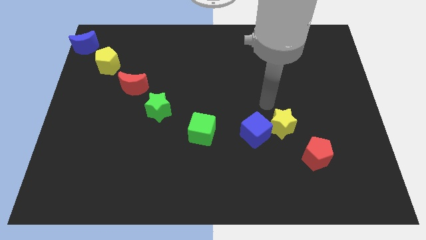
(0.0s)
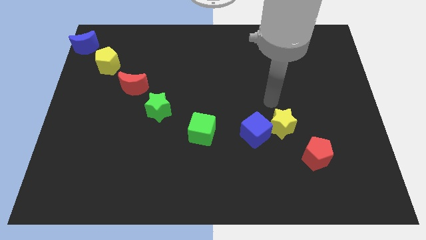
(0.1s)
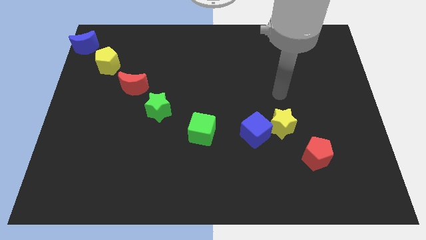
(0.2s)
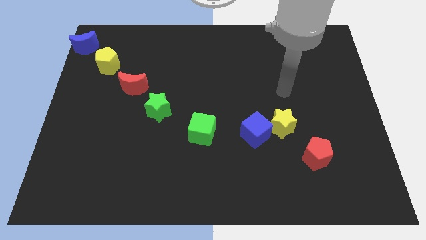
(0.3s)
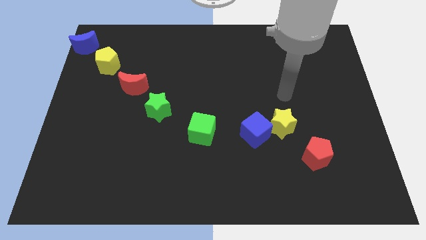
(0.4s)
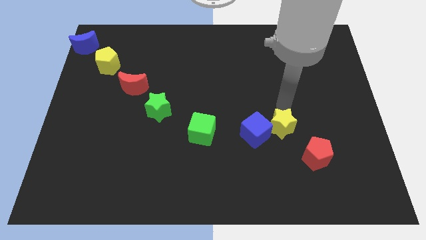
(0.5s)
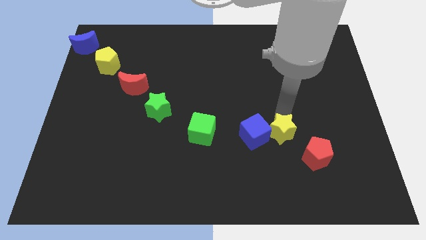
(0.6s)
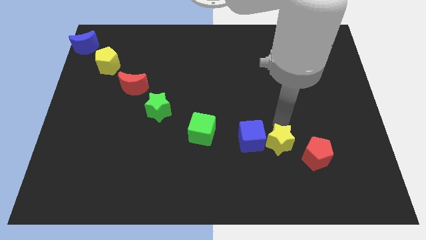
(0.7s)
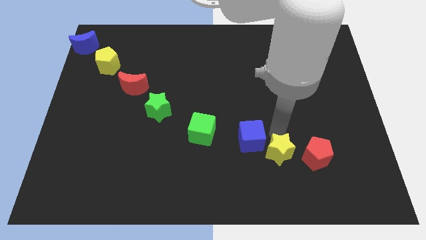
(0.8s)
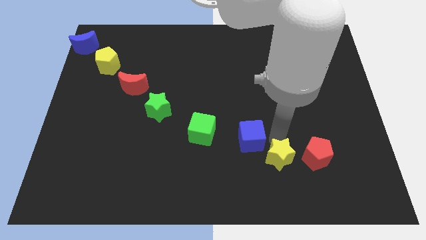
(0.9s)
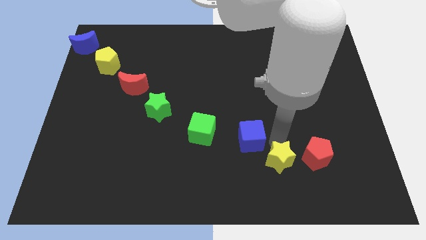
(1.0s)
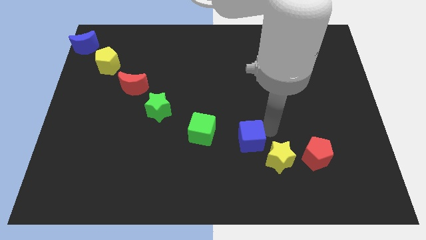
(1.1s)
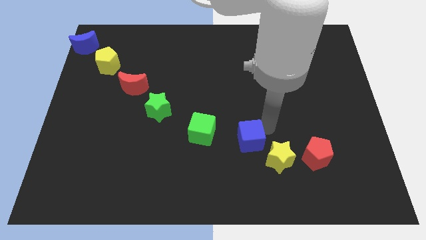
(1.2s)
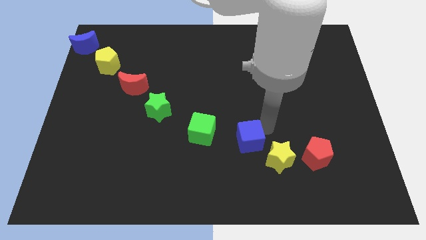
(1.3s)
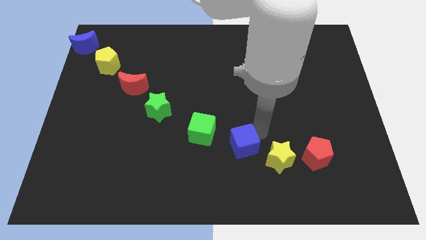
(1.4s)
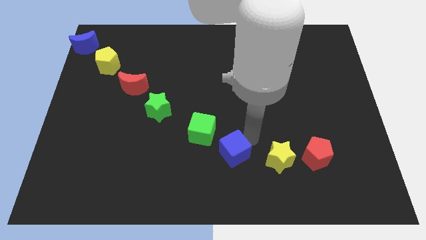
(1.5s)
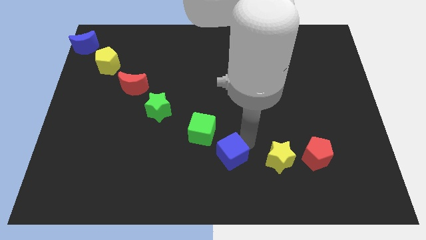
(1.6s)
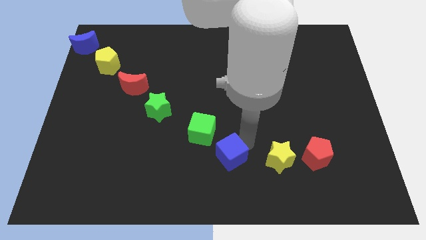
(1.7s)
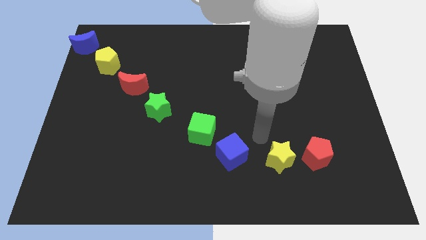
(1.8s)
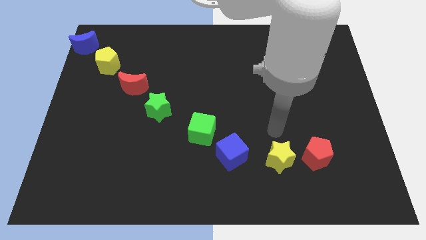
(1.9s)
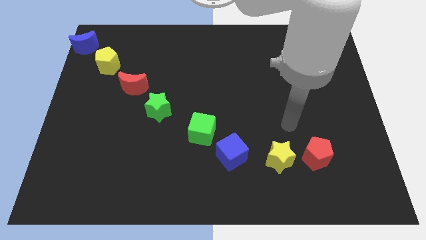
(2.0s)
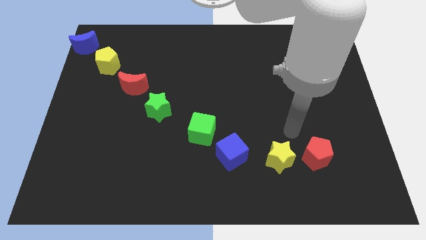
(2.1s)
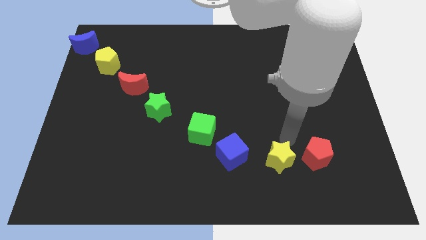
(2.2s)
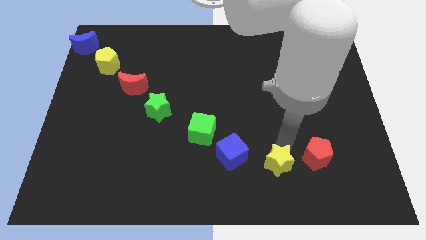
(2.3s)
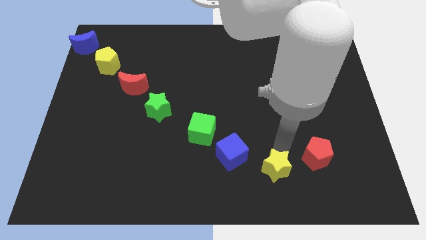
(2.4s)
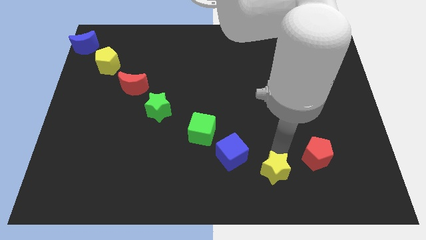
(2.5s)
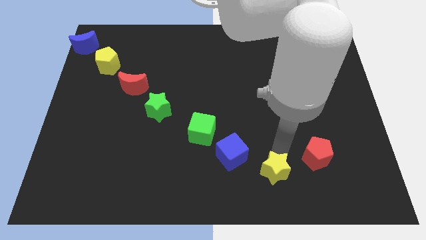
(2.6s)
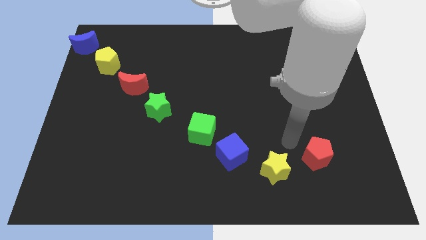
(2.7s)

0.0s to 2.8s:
move the yellow star diagonal to the blue cube

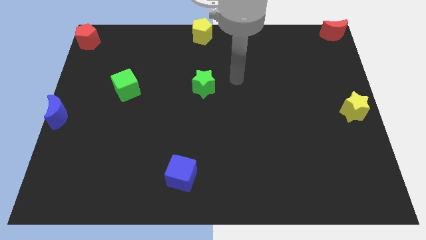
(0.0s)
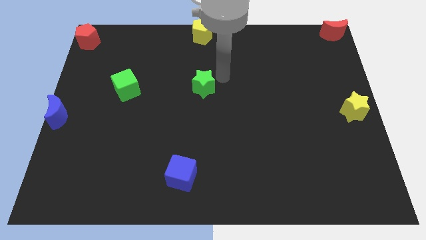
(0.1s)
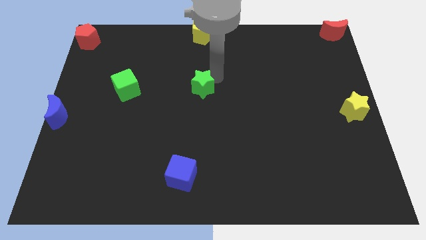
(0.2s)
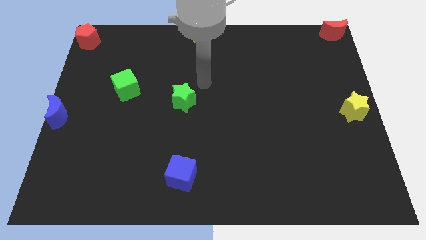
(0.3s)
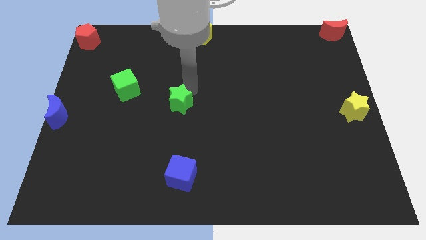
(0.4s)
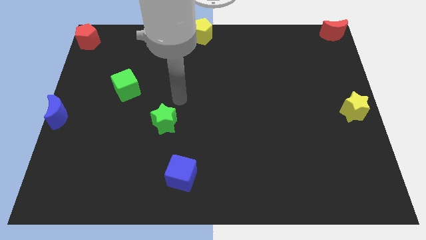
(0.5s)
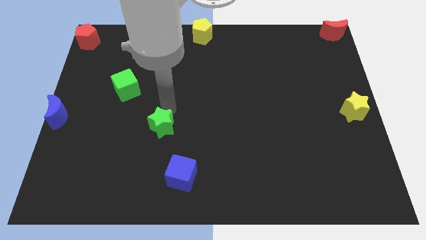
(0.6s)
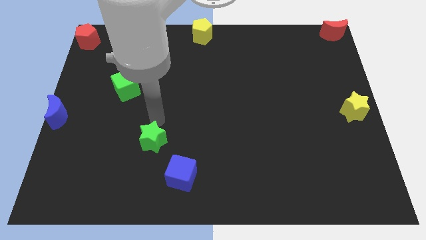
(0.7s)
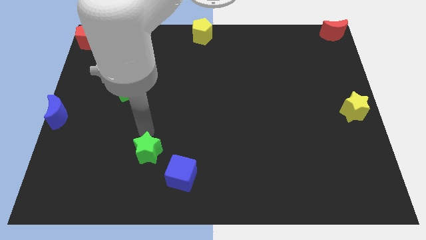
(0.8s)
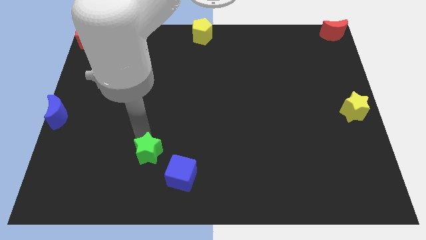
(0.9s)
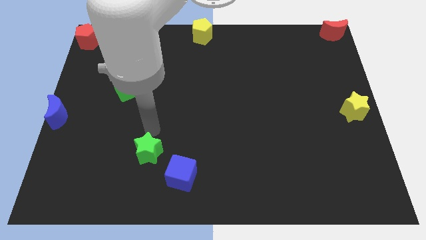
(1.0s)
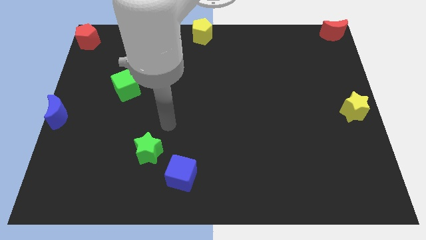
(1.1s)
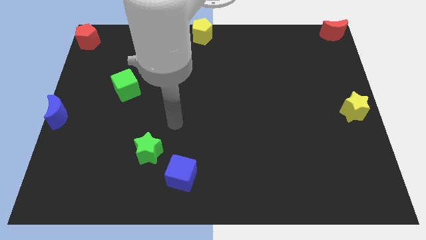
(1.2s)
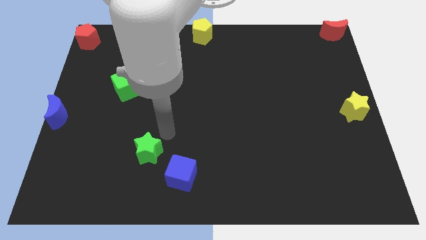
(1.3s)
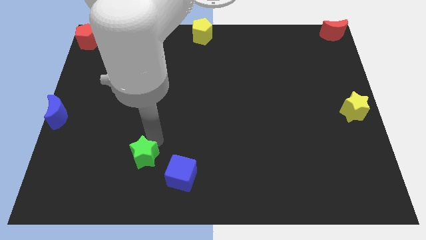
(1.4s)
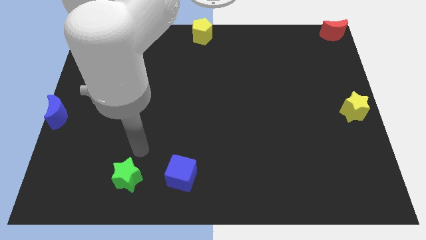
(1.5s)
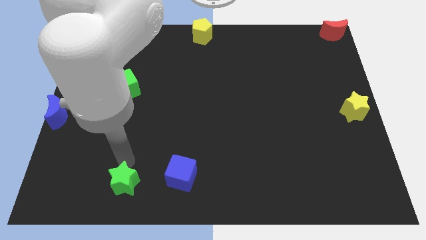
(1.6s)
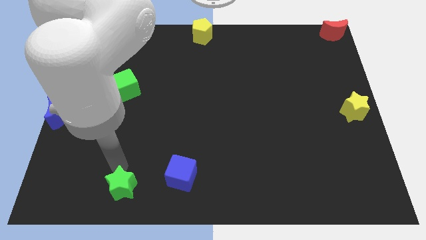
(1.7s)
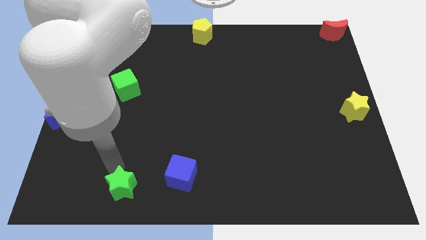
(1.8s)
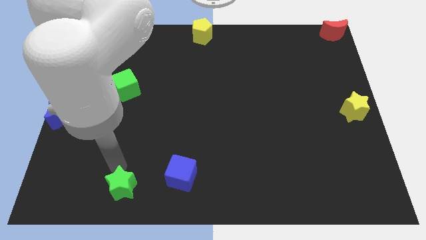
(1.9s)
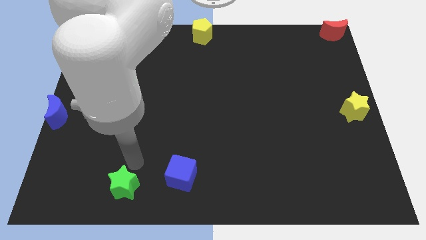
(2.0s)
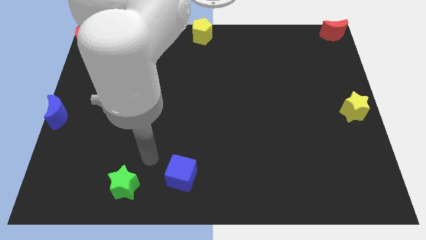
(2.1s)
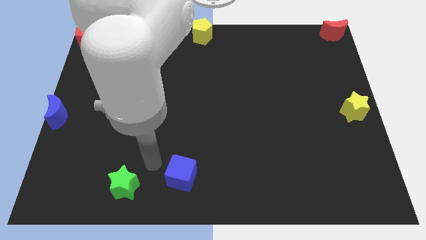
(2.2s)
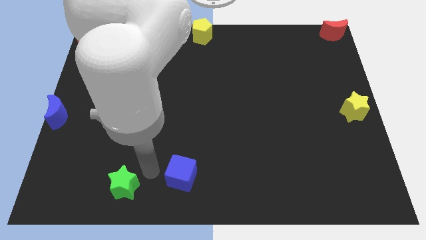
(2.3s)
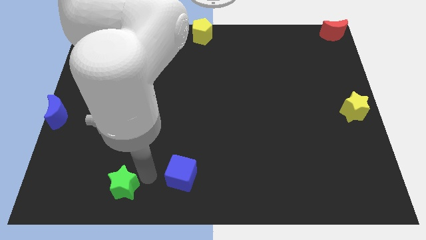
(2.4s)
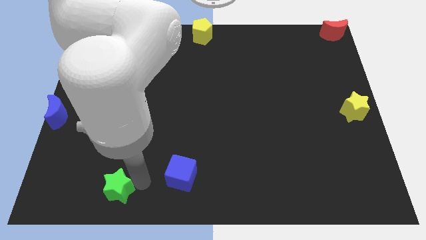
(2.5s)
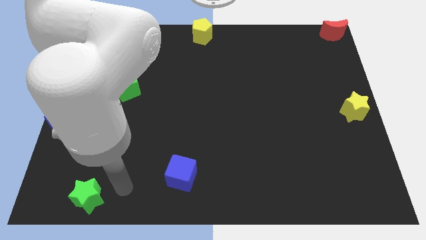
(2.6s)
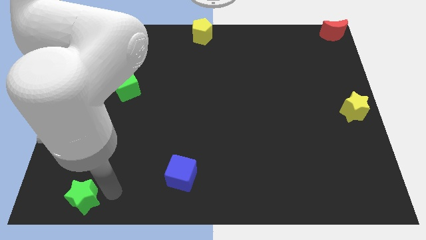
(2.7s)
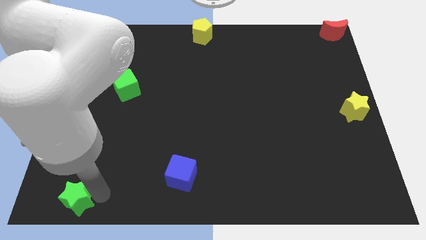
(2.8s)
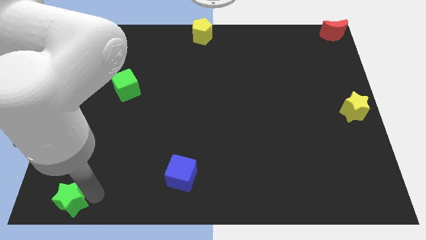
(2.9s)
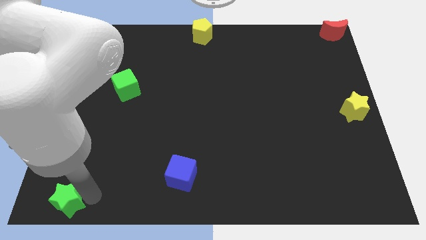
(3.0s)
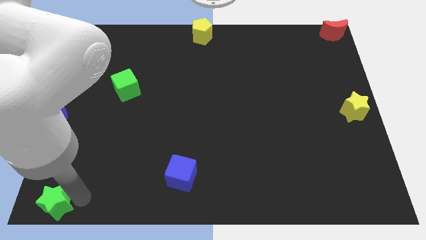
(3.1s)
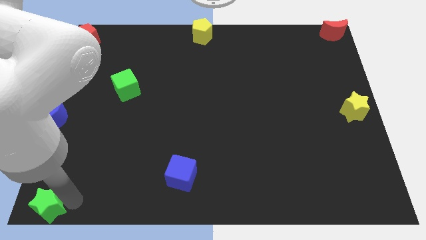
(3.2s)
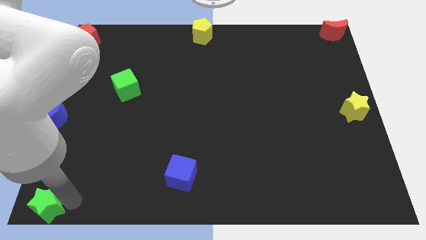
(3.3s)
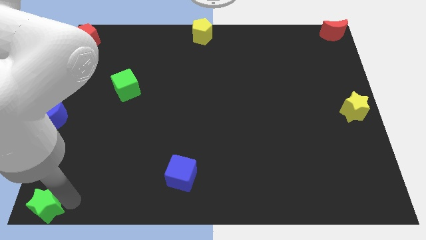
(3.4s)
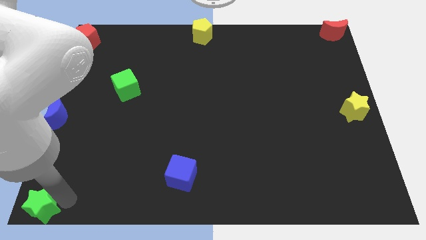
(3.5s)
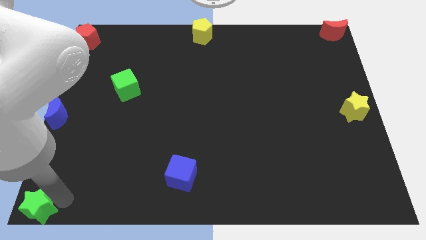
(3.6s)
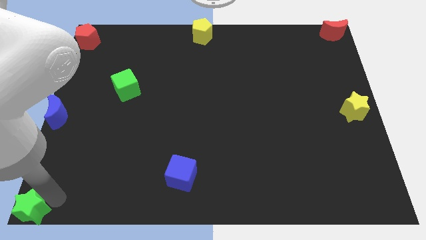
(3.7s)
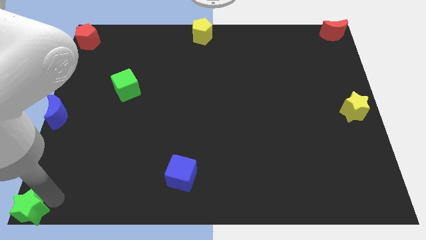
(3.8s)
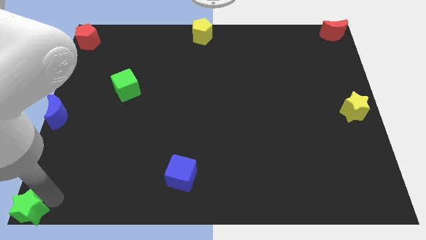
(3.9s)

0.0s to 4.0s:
place the green star on the bottom left of the board

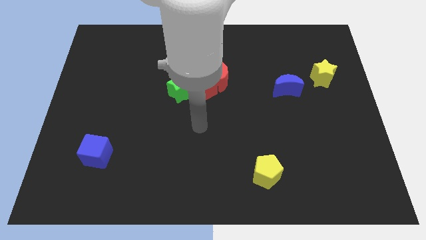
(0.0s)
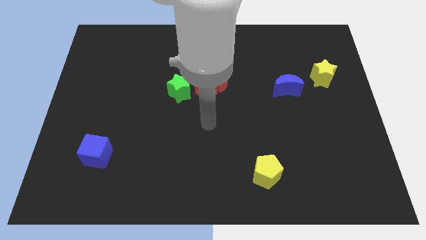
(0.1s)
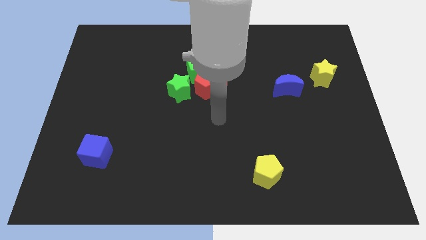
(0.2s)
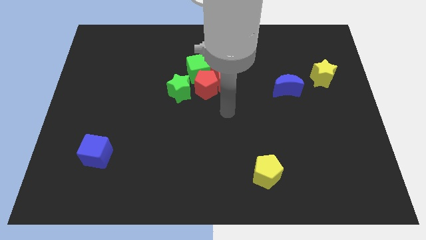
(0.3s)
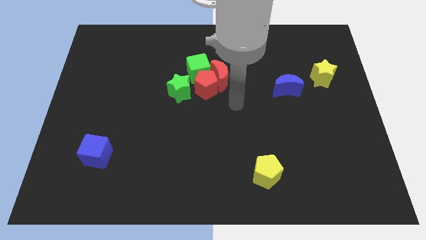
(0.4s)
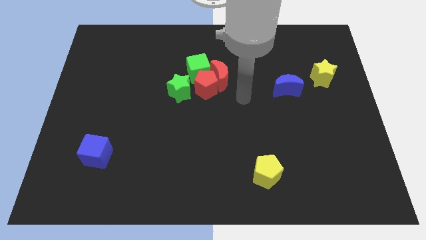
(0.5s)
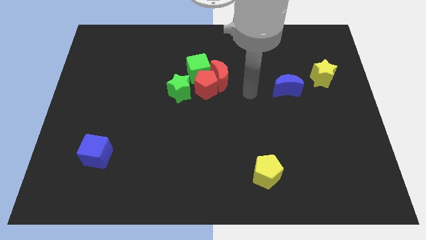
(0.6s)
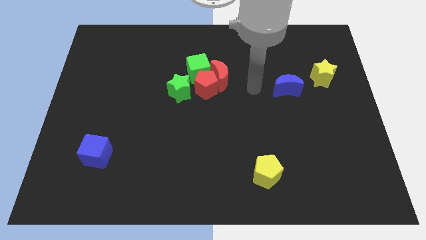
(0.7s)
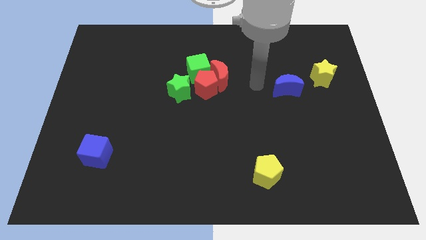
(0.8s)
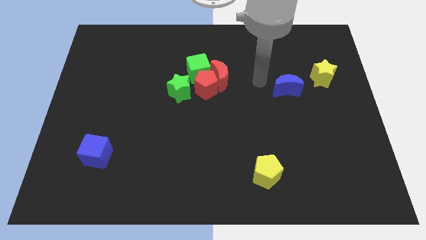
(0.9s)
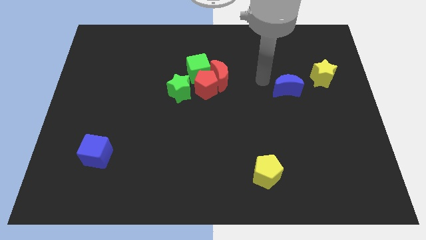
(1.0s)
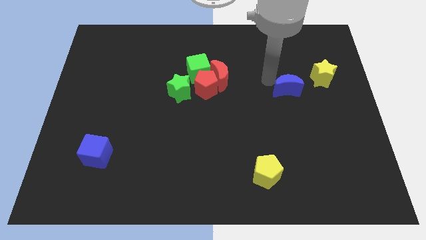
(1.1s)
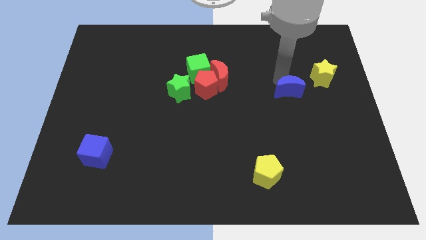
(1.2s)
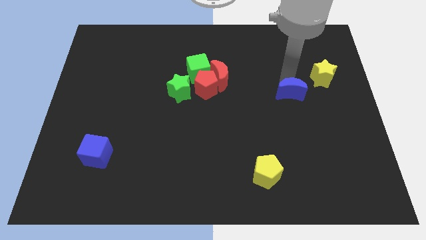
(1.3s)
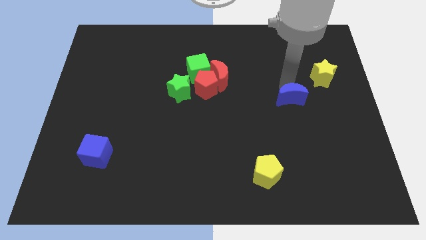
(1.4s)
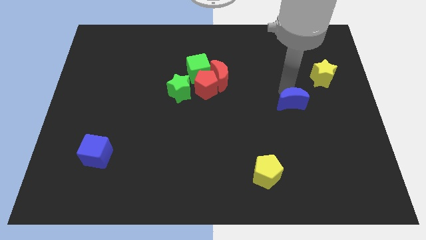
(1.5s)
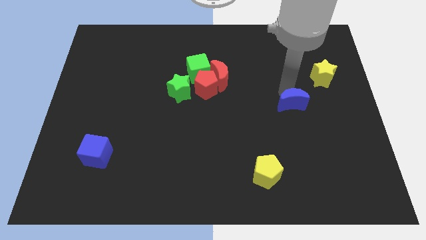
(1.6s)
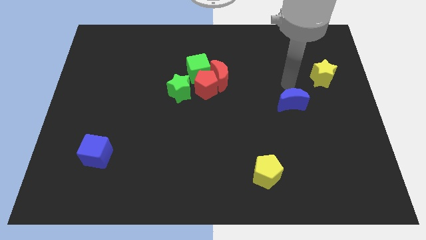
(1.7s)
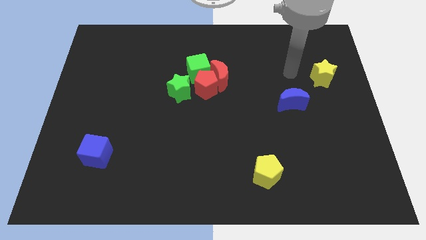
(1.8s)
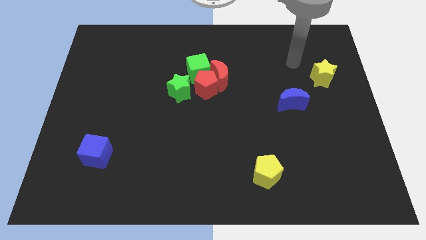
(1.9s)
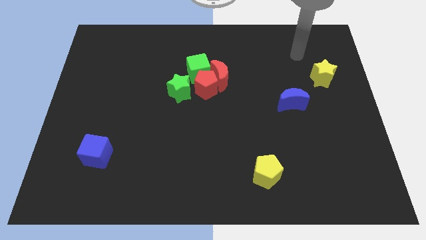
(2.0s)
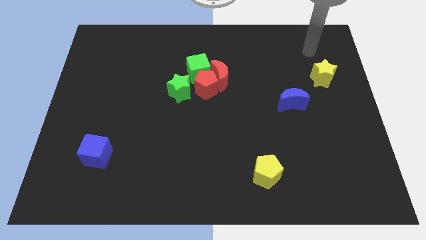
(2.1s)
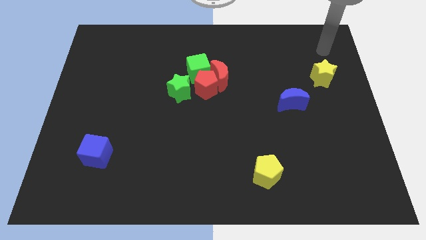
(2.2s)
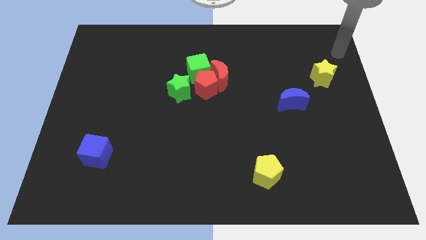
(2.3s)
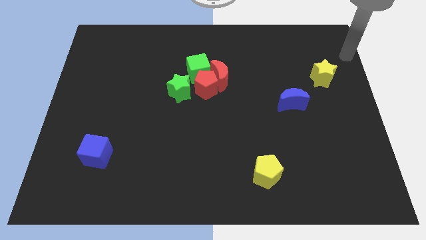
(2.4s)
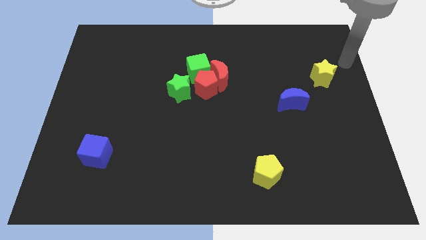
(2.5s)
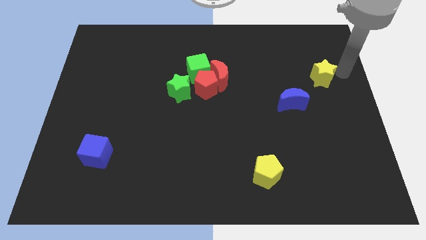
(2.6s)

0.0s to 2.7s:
slightly push the blue crescent down
